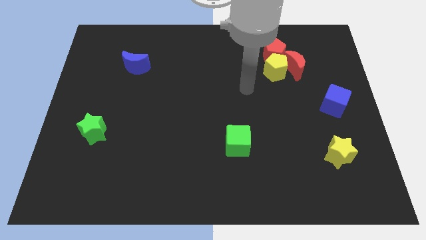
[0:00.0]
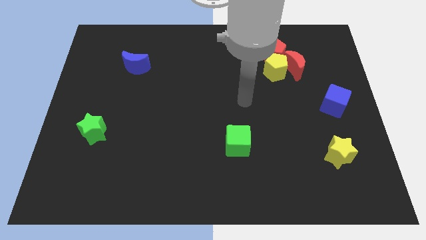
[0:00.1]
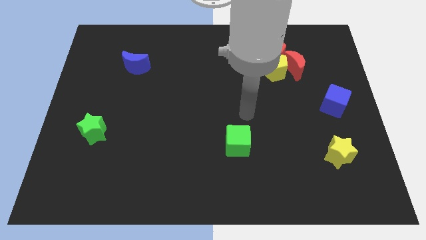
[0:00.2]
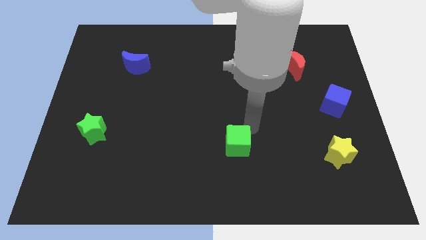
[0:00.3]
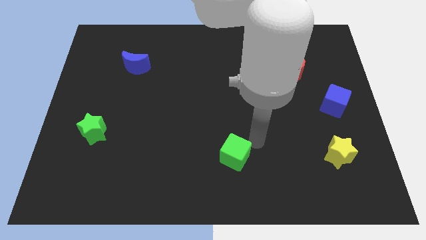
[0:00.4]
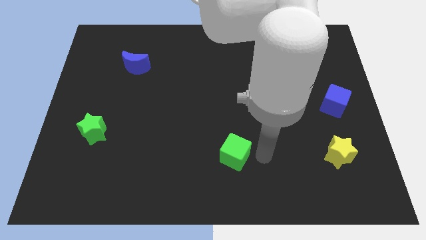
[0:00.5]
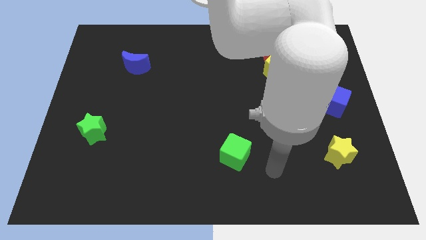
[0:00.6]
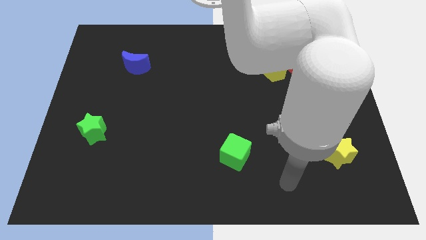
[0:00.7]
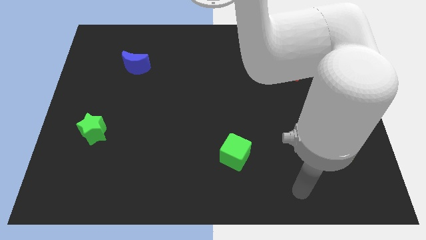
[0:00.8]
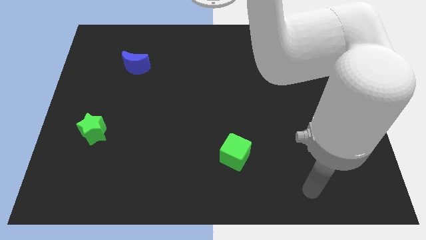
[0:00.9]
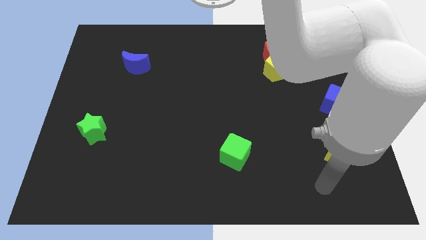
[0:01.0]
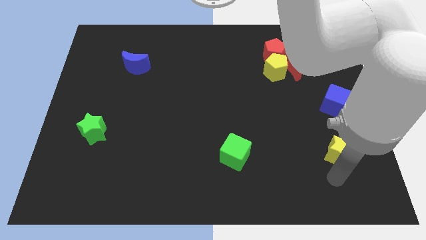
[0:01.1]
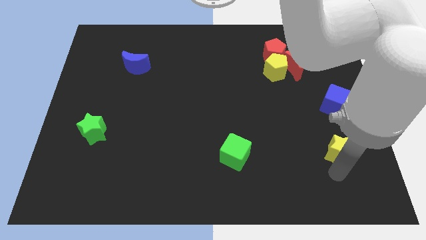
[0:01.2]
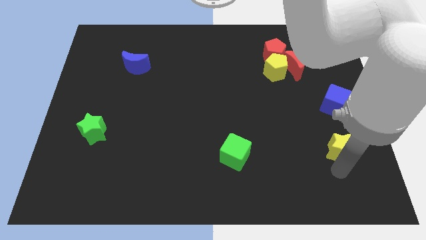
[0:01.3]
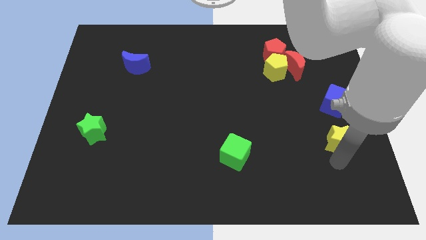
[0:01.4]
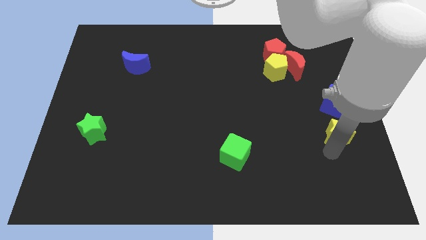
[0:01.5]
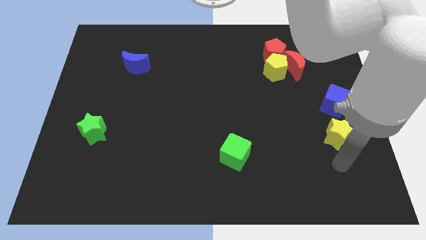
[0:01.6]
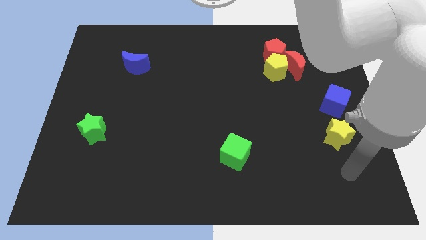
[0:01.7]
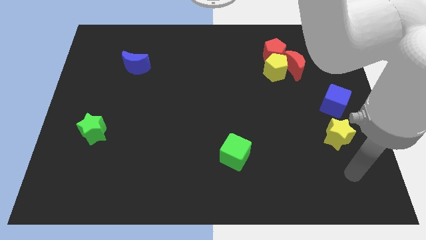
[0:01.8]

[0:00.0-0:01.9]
move the yellow star near to the blue cube

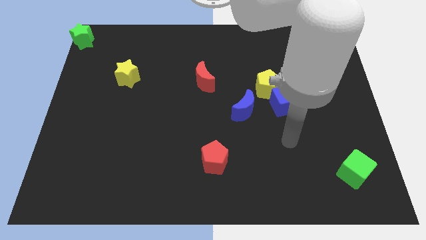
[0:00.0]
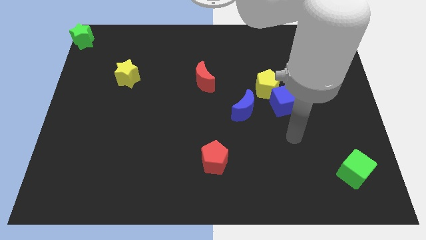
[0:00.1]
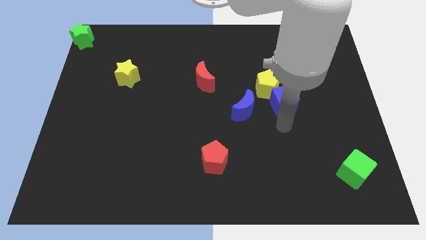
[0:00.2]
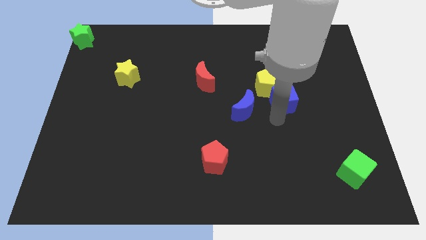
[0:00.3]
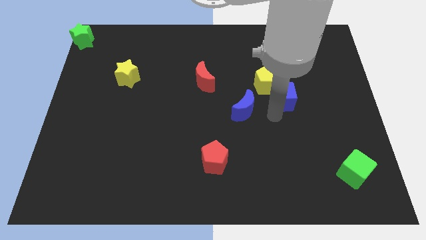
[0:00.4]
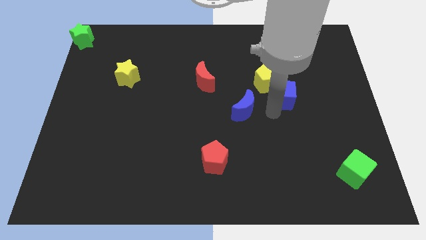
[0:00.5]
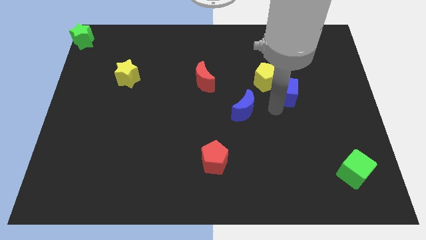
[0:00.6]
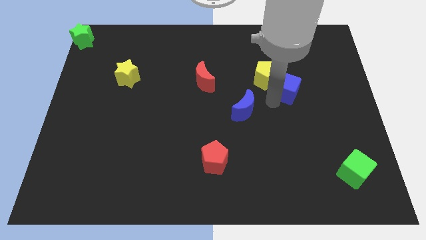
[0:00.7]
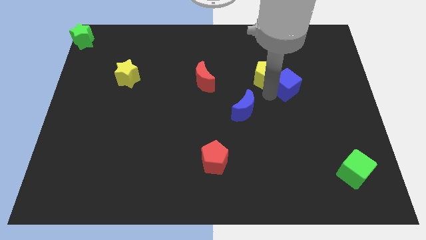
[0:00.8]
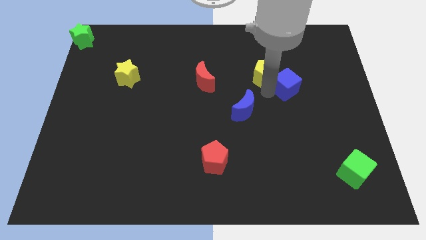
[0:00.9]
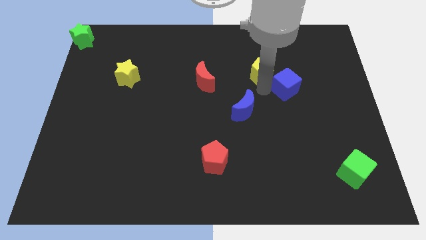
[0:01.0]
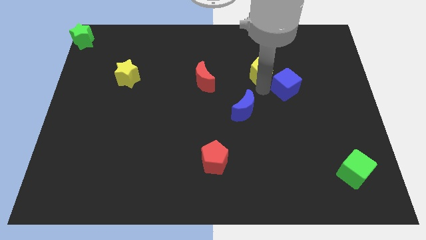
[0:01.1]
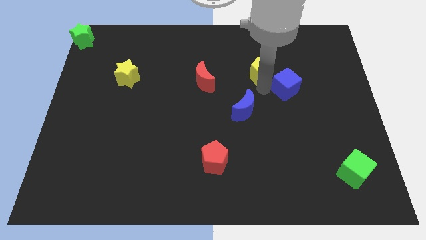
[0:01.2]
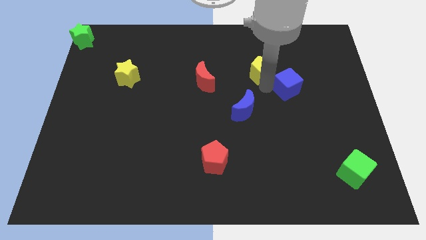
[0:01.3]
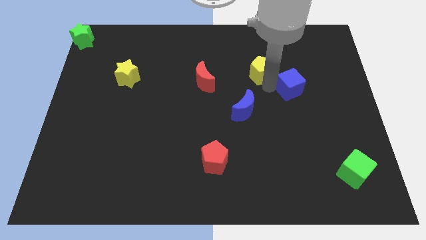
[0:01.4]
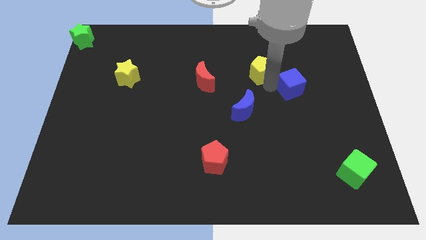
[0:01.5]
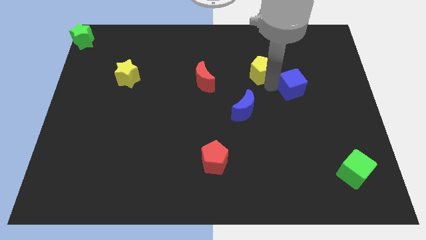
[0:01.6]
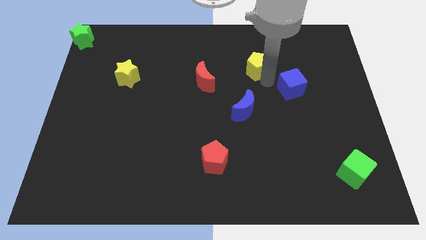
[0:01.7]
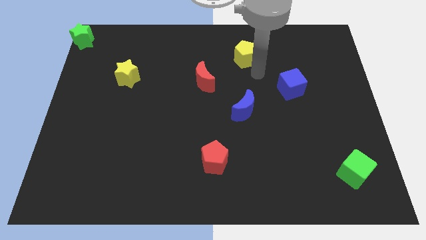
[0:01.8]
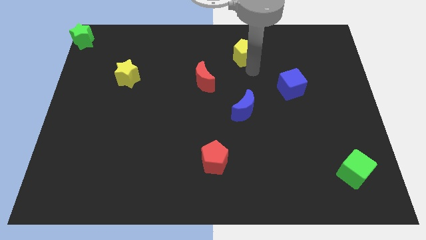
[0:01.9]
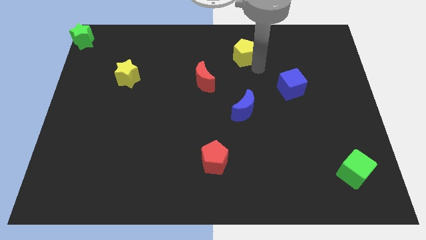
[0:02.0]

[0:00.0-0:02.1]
separate yellow pentagon from blue cube

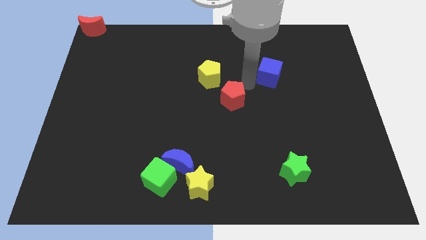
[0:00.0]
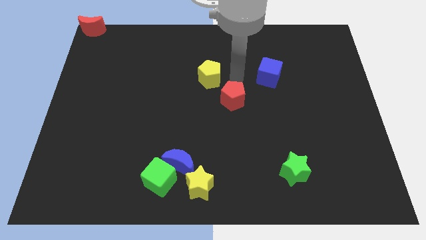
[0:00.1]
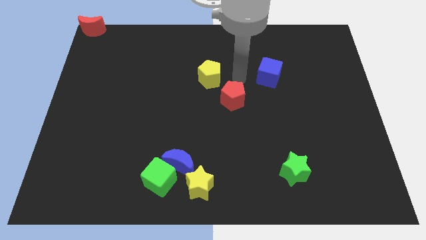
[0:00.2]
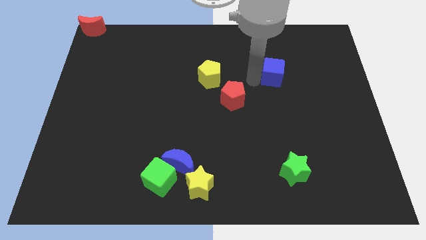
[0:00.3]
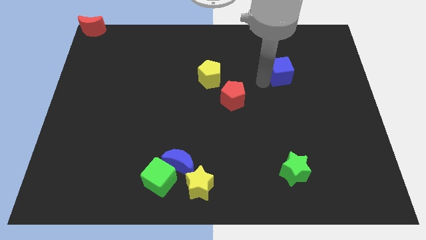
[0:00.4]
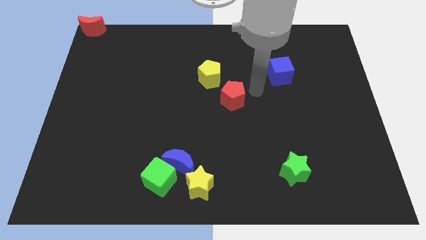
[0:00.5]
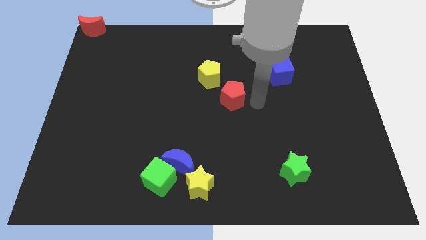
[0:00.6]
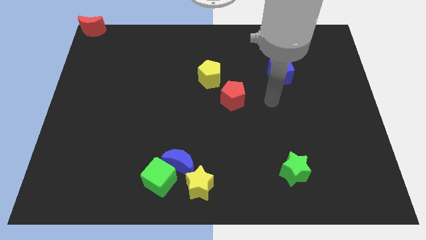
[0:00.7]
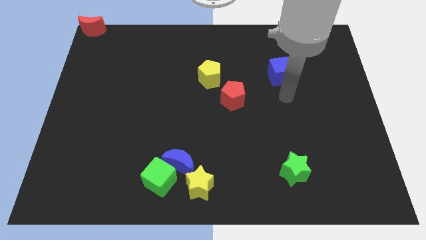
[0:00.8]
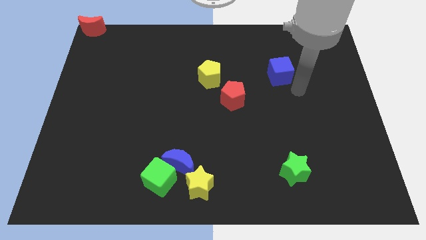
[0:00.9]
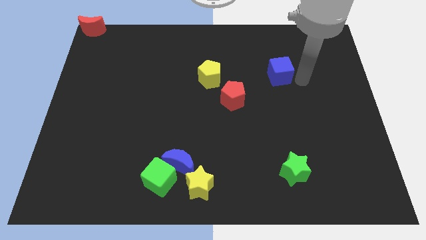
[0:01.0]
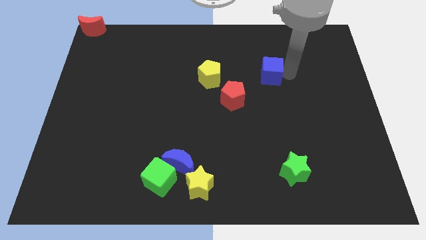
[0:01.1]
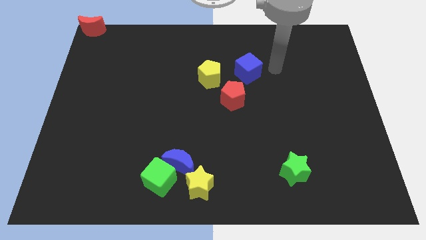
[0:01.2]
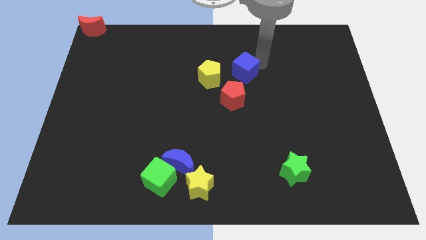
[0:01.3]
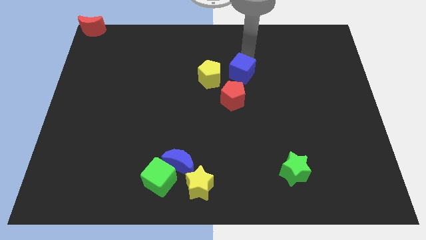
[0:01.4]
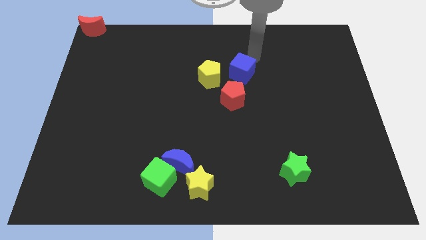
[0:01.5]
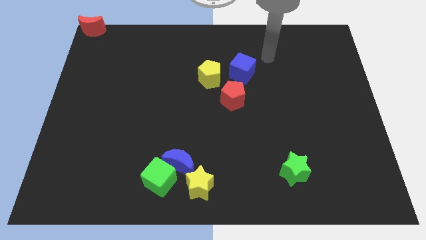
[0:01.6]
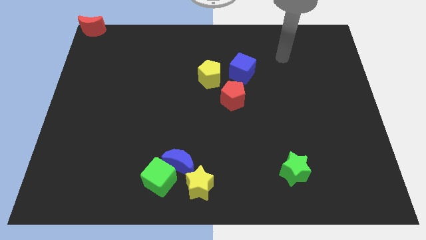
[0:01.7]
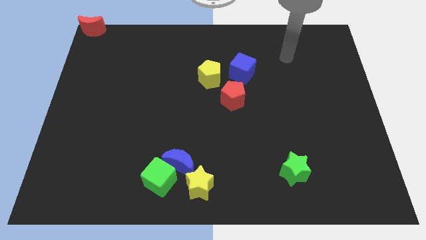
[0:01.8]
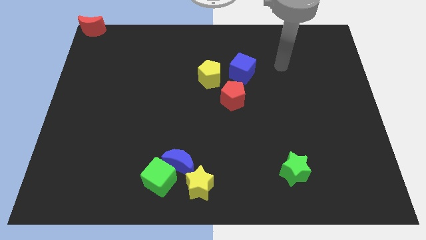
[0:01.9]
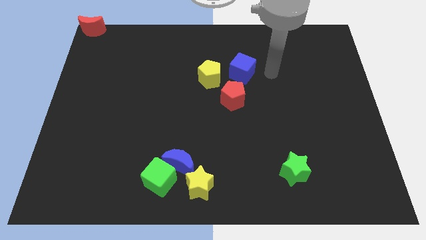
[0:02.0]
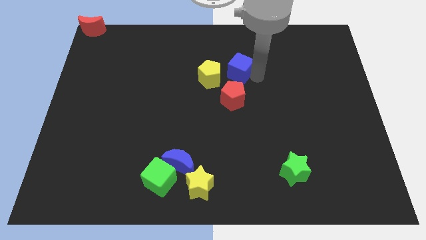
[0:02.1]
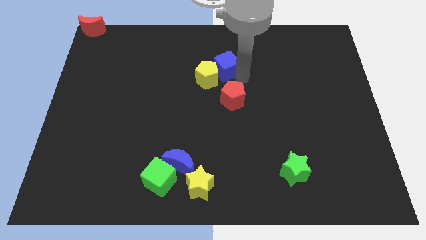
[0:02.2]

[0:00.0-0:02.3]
push the blue cube to the top of the red pentagon

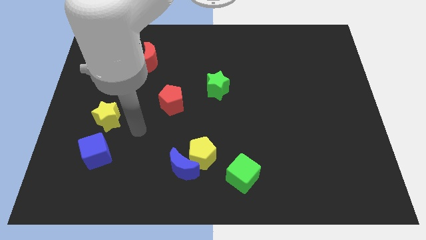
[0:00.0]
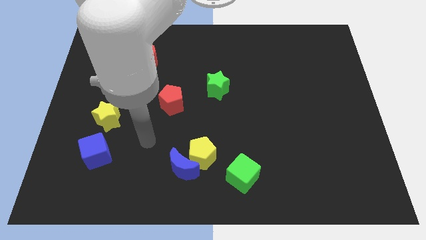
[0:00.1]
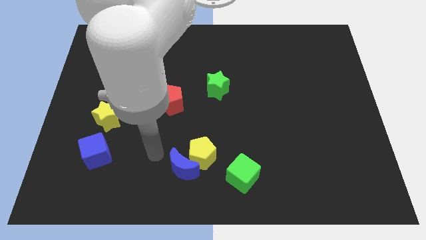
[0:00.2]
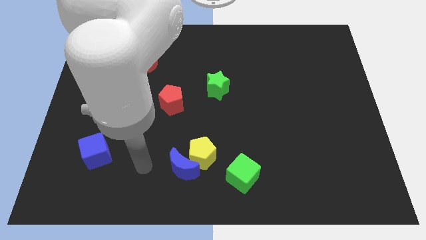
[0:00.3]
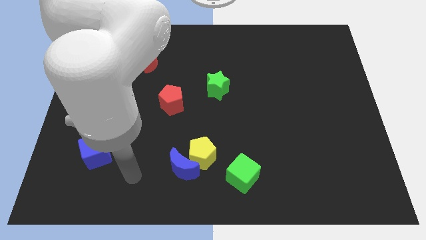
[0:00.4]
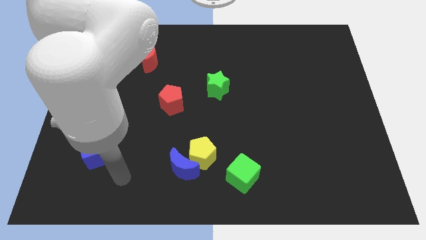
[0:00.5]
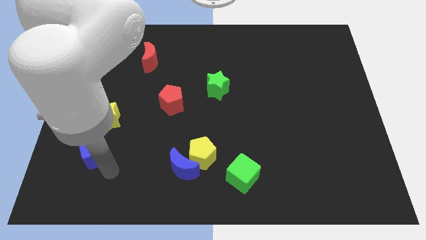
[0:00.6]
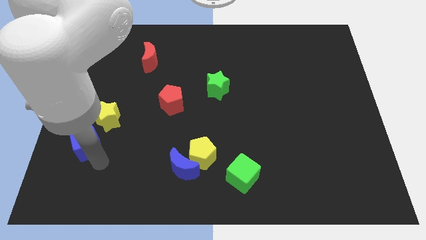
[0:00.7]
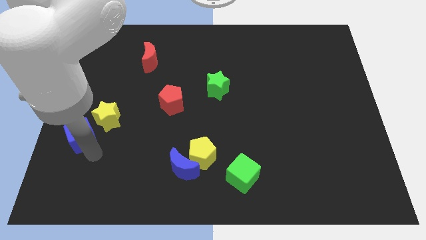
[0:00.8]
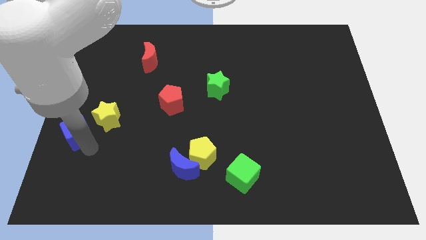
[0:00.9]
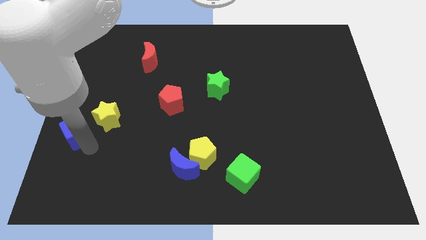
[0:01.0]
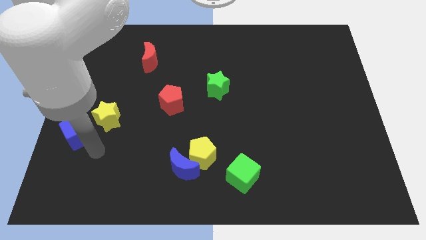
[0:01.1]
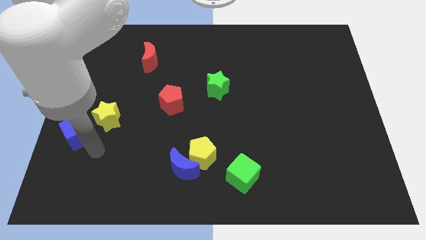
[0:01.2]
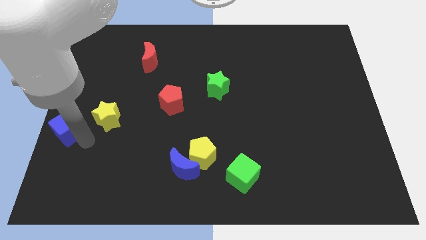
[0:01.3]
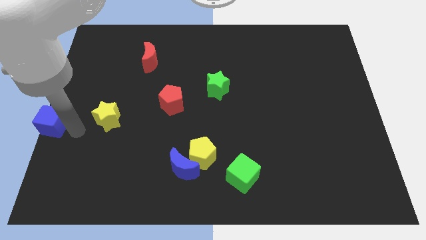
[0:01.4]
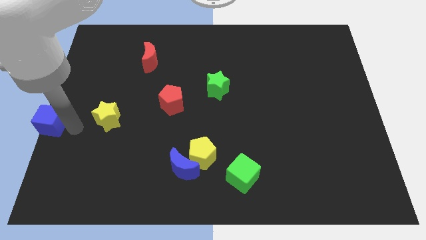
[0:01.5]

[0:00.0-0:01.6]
push the blue cube to the left side of the table

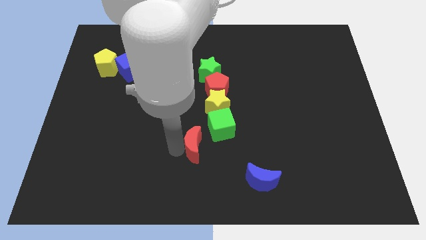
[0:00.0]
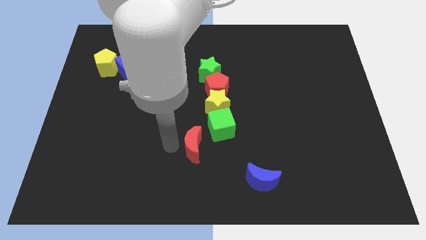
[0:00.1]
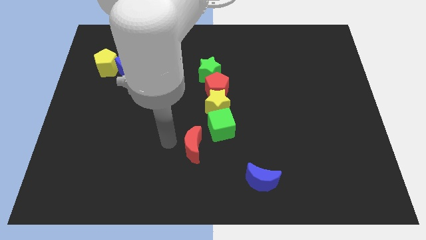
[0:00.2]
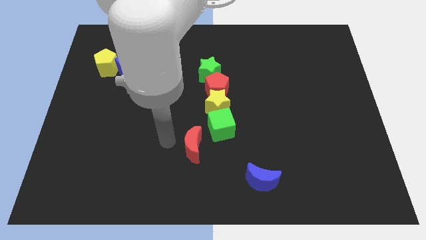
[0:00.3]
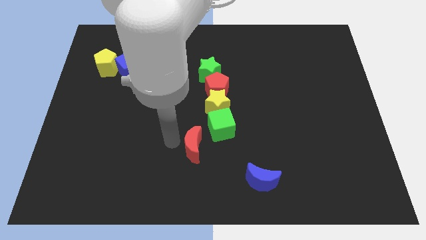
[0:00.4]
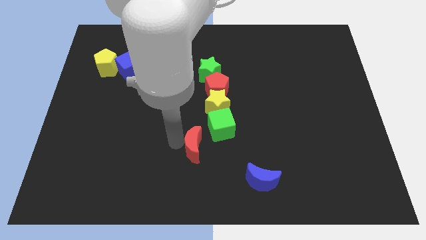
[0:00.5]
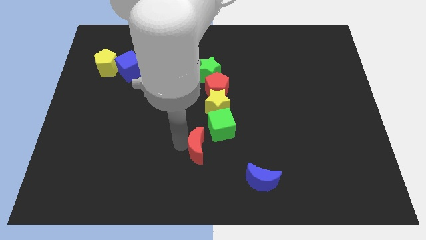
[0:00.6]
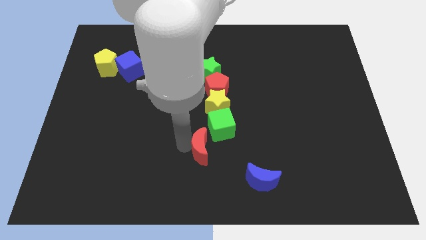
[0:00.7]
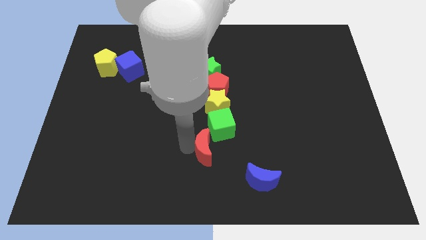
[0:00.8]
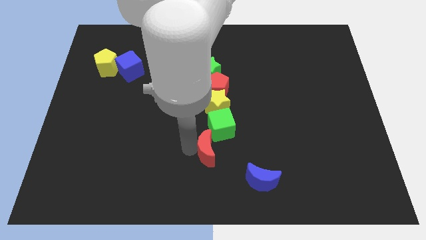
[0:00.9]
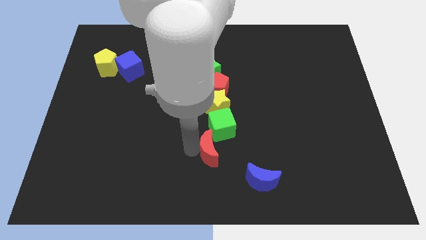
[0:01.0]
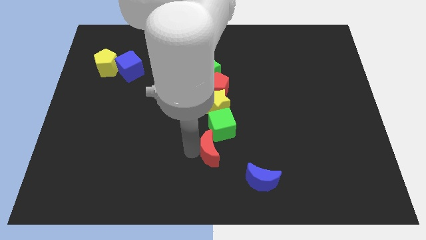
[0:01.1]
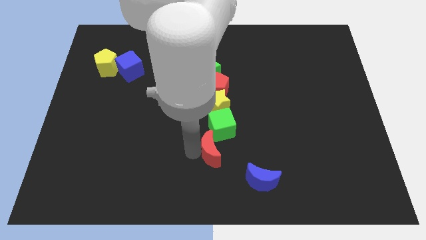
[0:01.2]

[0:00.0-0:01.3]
move the red crescent slightly to the right
